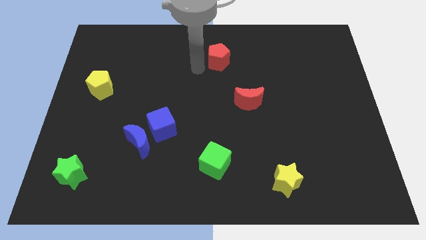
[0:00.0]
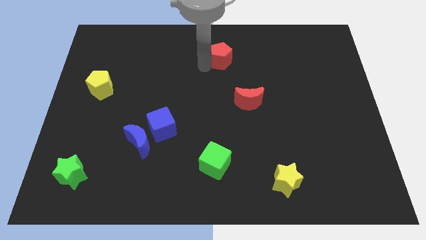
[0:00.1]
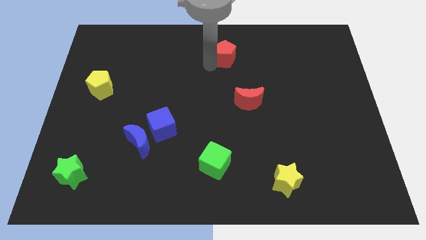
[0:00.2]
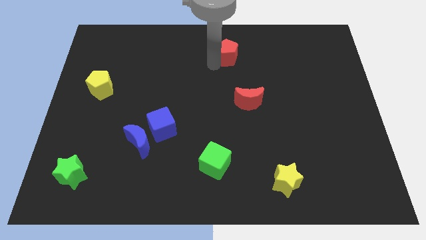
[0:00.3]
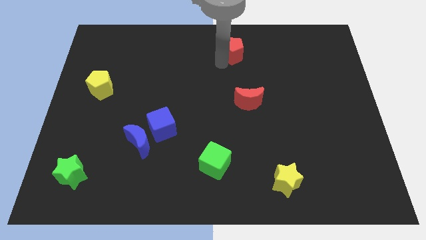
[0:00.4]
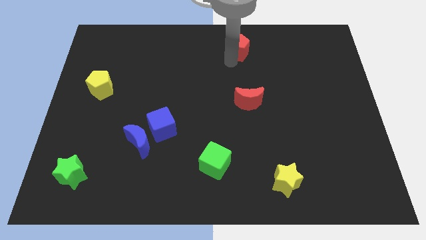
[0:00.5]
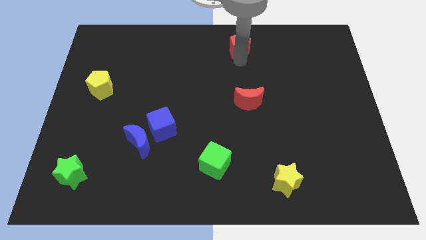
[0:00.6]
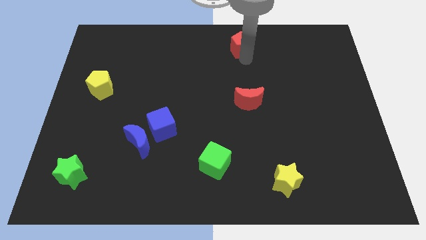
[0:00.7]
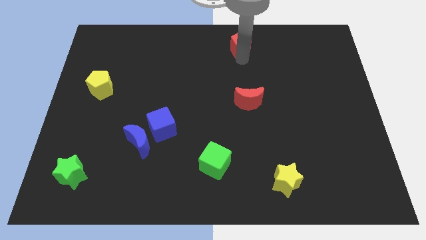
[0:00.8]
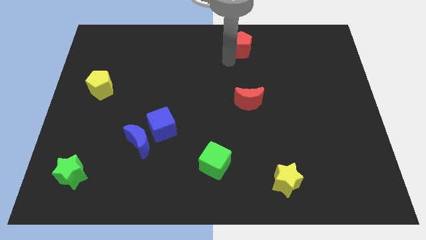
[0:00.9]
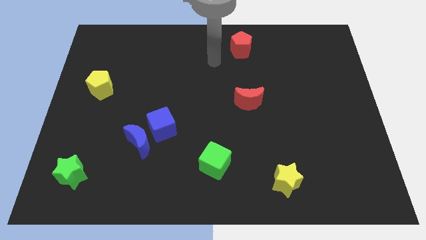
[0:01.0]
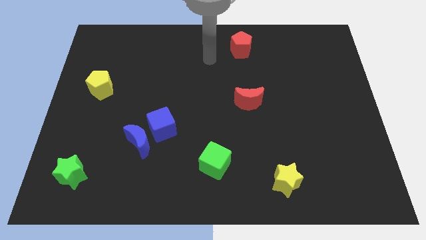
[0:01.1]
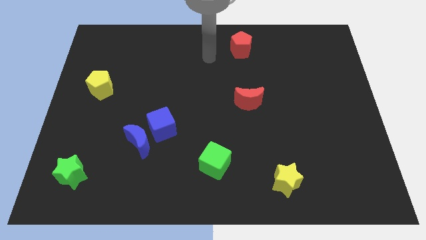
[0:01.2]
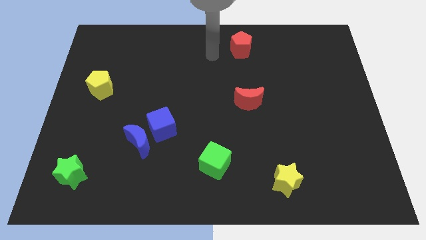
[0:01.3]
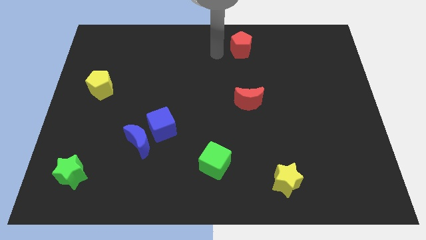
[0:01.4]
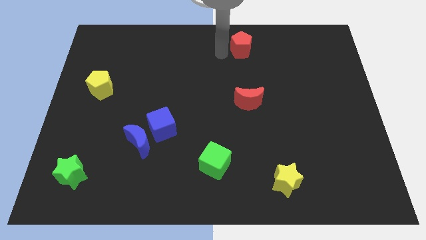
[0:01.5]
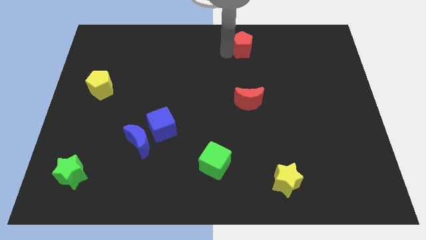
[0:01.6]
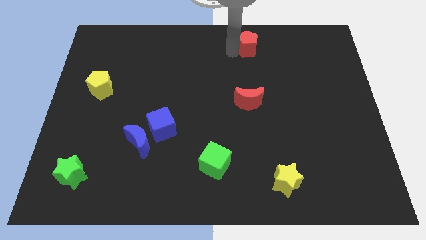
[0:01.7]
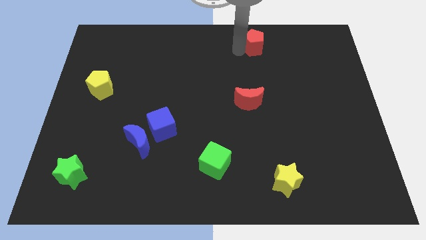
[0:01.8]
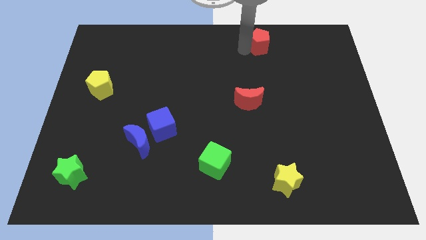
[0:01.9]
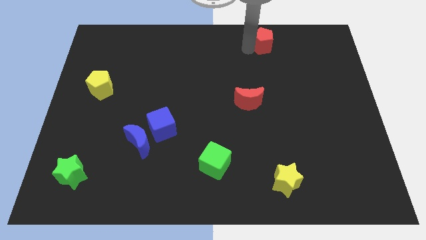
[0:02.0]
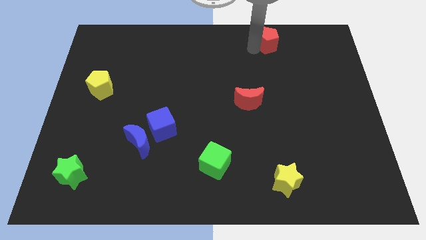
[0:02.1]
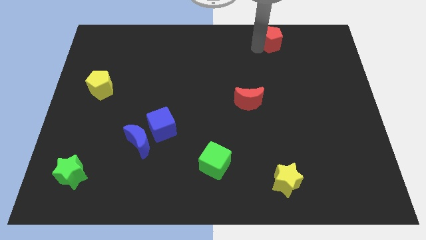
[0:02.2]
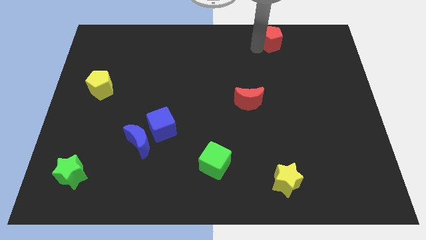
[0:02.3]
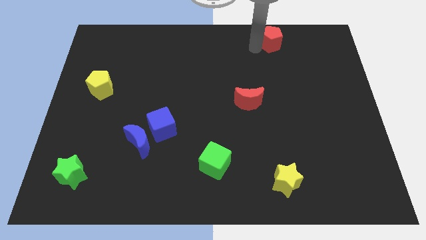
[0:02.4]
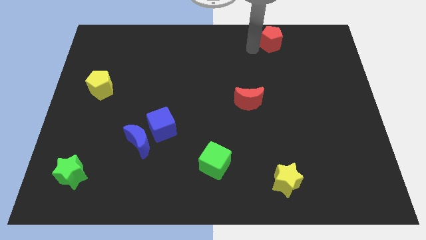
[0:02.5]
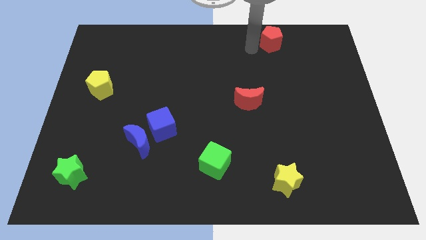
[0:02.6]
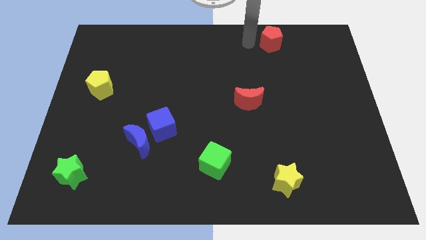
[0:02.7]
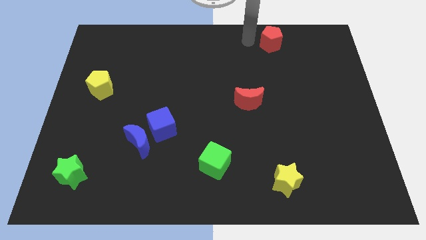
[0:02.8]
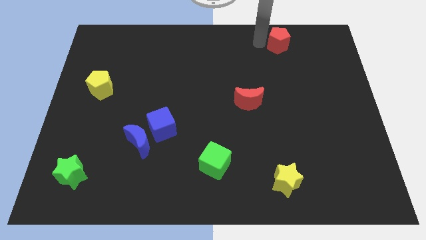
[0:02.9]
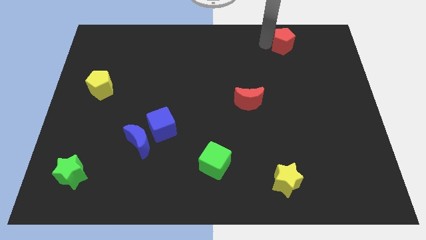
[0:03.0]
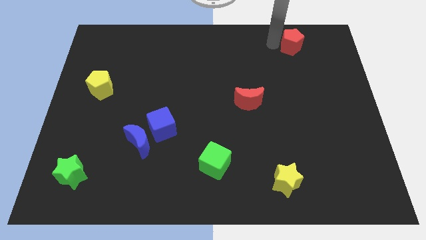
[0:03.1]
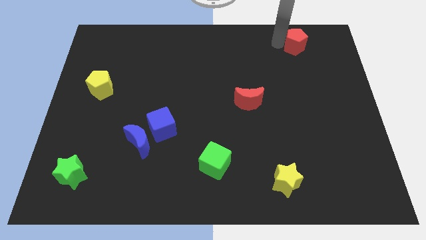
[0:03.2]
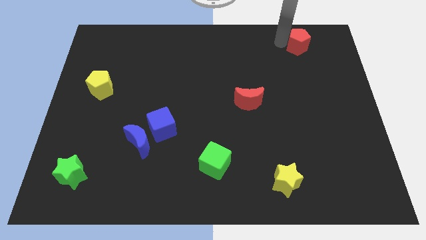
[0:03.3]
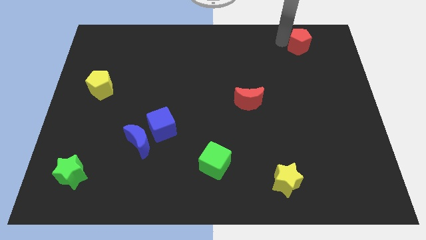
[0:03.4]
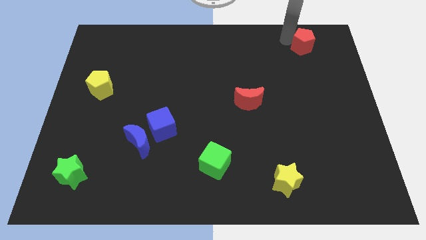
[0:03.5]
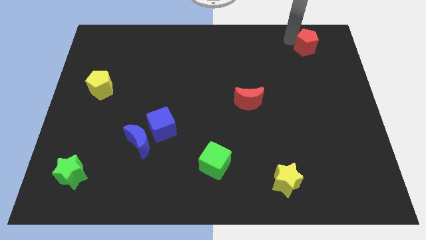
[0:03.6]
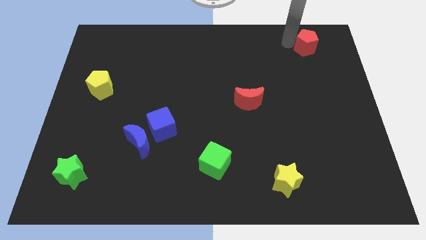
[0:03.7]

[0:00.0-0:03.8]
move the red pentagon to the top right of the red crescent

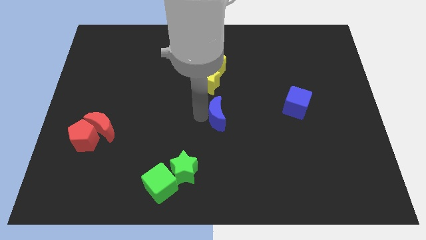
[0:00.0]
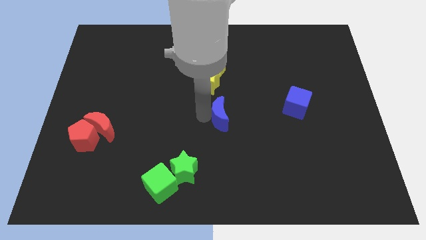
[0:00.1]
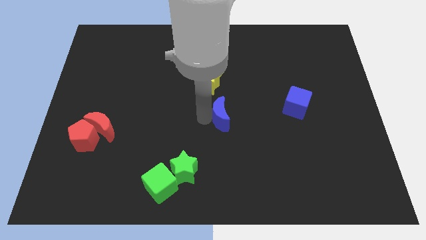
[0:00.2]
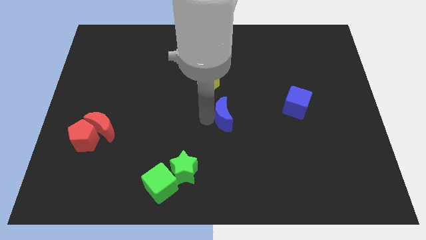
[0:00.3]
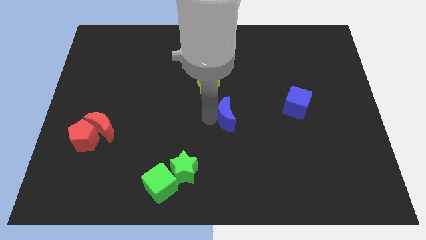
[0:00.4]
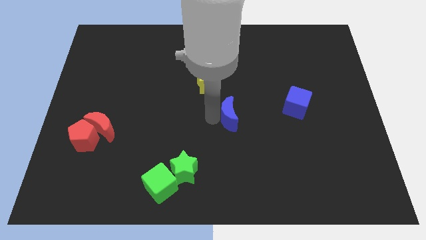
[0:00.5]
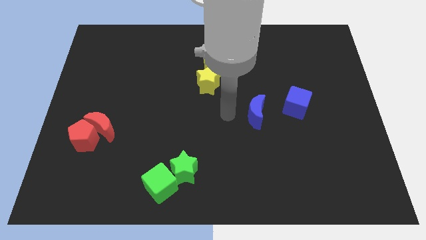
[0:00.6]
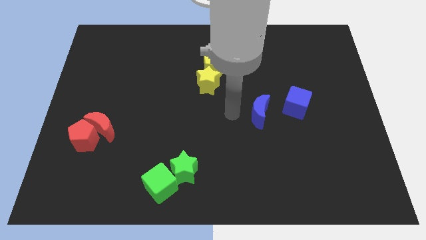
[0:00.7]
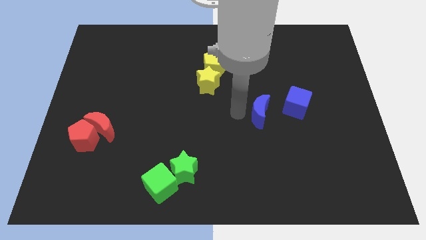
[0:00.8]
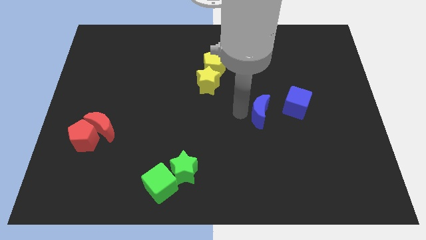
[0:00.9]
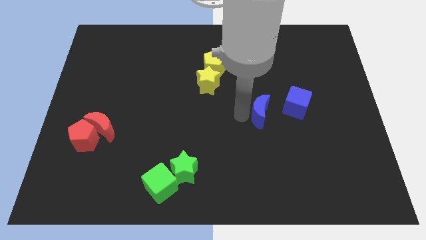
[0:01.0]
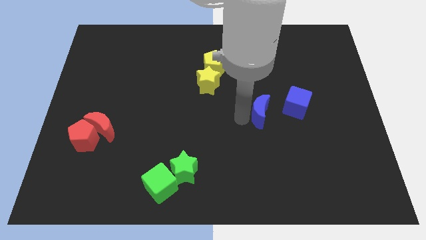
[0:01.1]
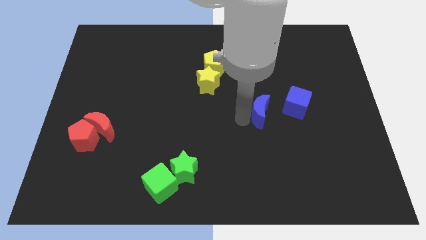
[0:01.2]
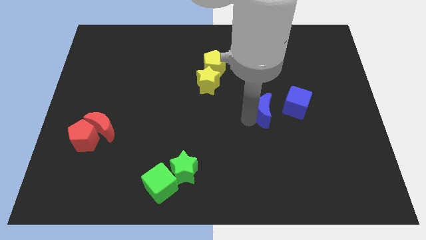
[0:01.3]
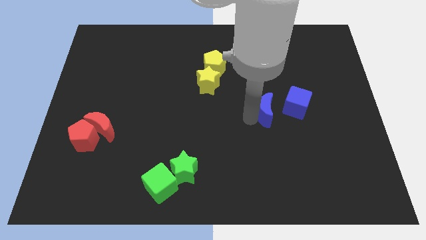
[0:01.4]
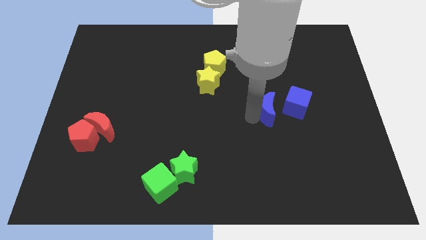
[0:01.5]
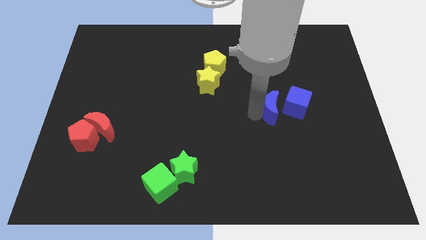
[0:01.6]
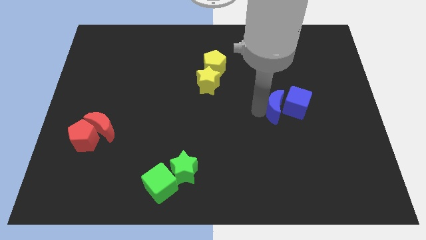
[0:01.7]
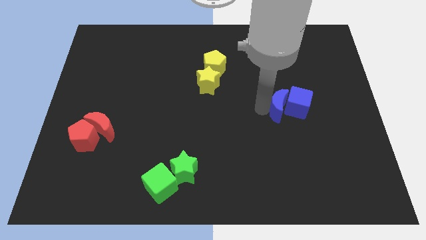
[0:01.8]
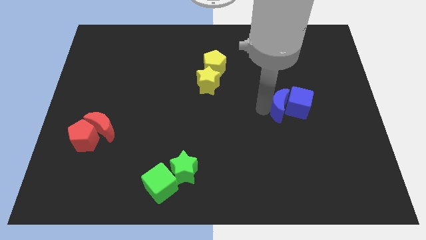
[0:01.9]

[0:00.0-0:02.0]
move the blue blocks to one side of the board

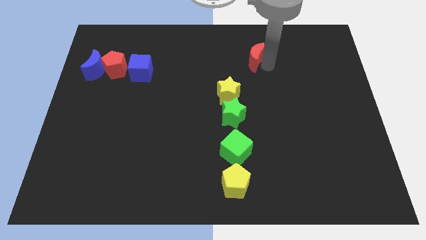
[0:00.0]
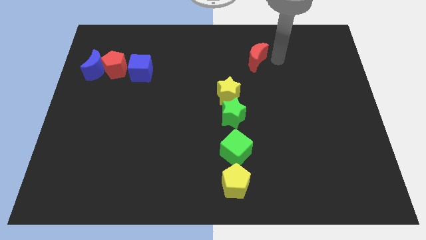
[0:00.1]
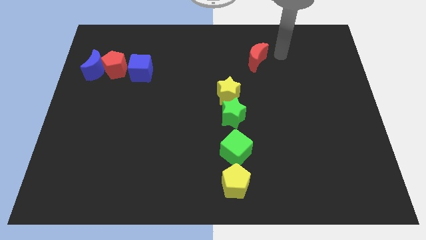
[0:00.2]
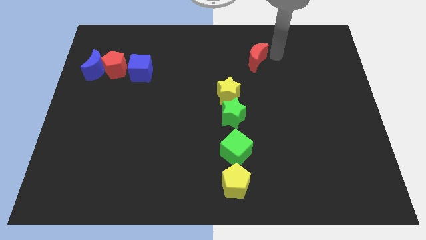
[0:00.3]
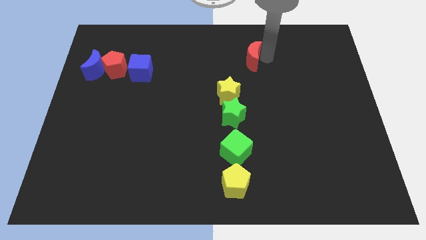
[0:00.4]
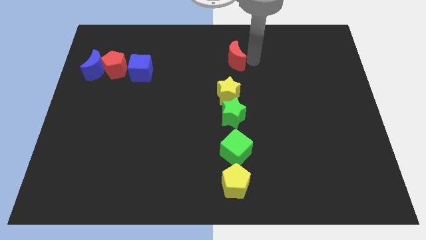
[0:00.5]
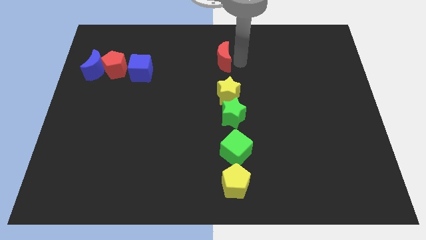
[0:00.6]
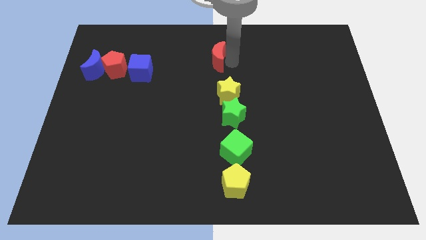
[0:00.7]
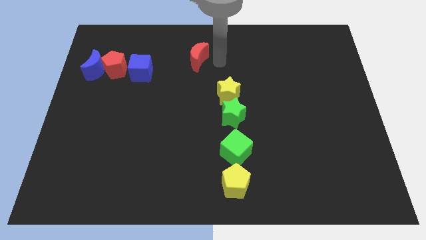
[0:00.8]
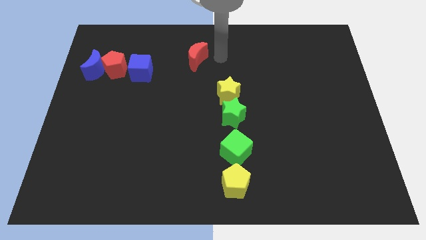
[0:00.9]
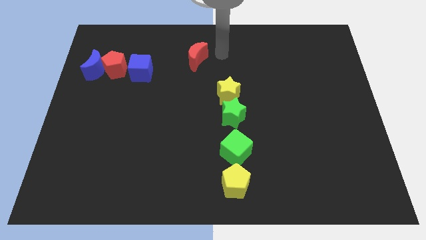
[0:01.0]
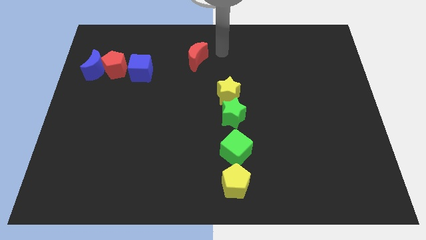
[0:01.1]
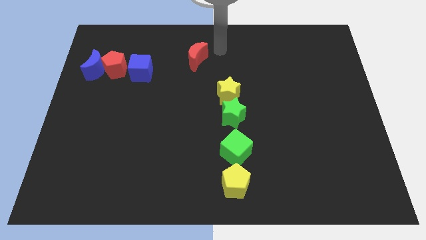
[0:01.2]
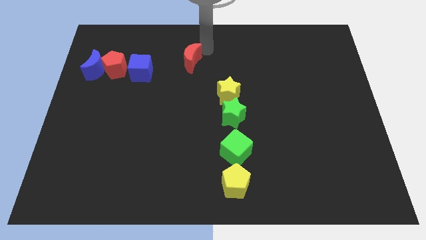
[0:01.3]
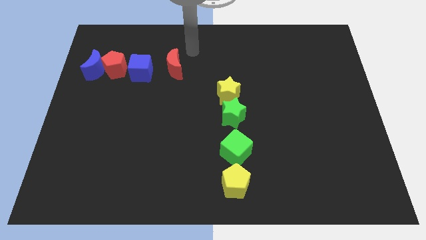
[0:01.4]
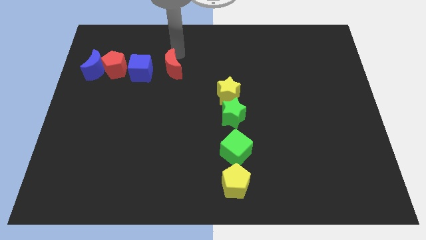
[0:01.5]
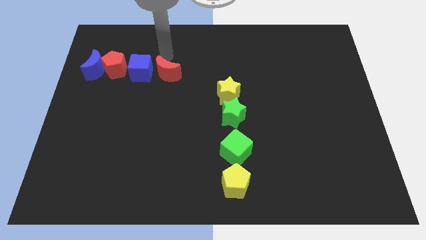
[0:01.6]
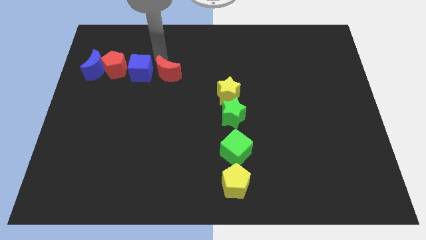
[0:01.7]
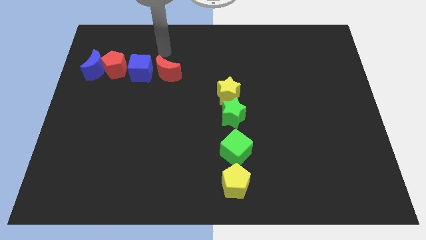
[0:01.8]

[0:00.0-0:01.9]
move the red moon to the right side of the blue cube

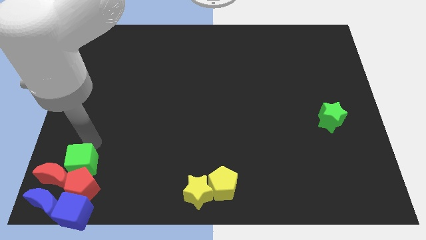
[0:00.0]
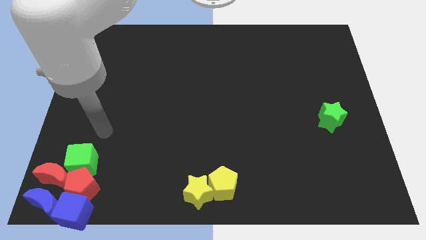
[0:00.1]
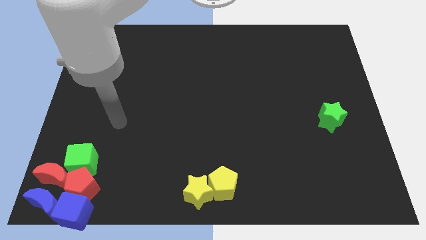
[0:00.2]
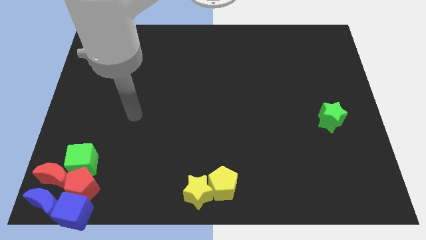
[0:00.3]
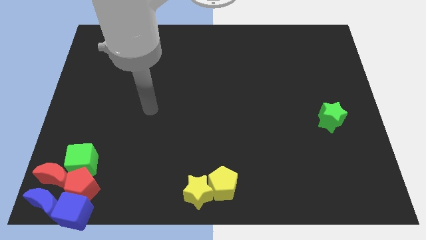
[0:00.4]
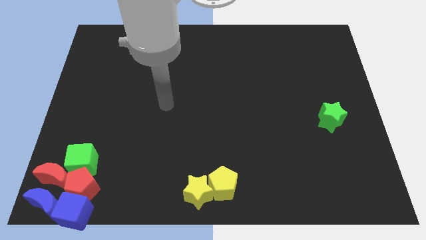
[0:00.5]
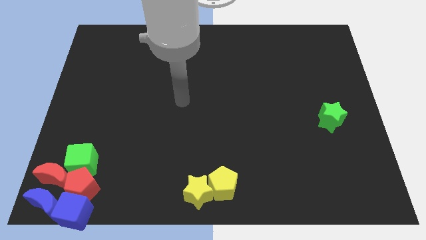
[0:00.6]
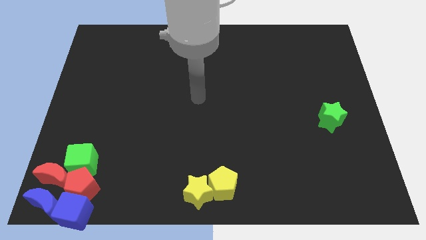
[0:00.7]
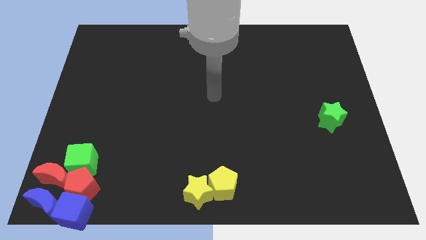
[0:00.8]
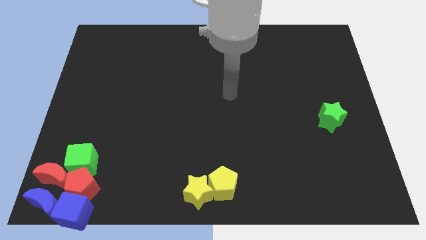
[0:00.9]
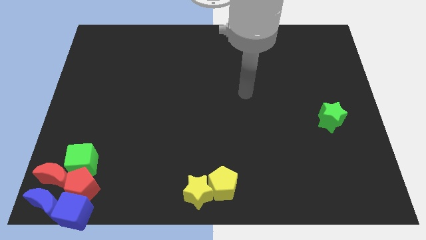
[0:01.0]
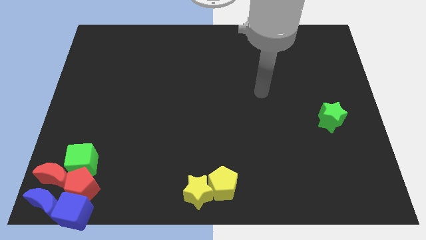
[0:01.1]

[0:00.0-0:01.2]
move the arm away from the green cube
